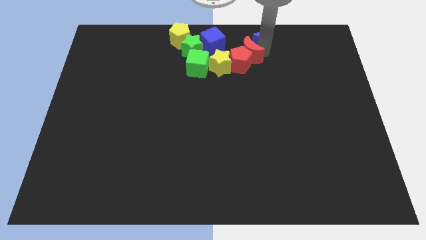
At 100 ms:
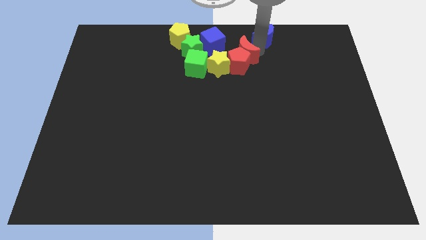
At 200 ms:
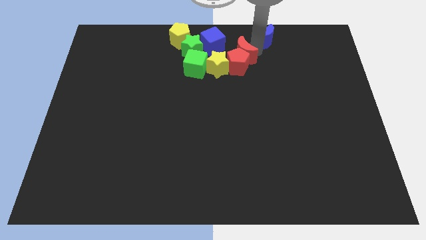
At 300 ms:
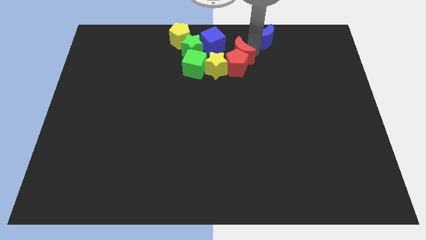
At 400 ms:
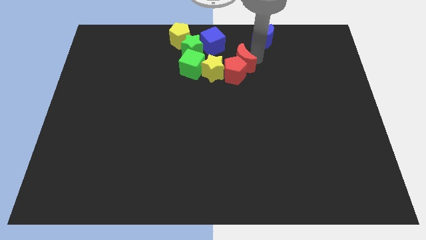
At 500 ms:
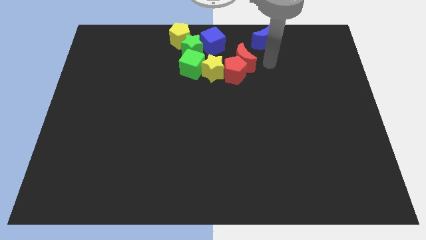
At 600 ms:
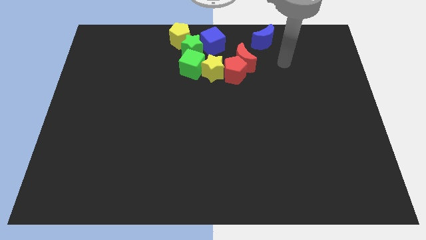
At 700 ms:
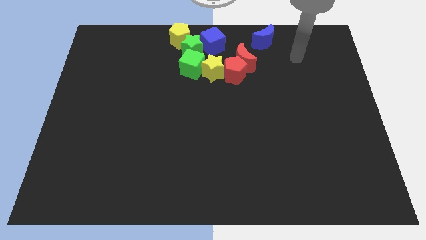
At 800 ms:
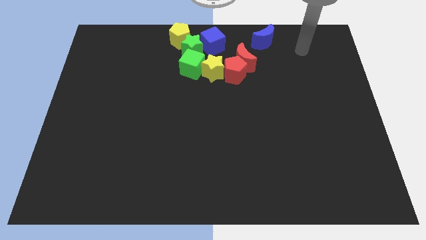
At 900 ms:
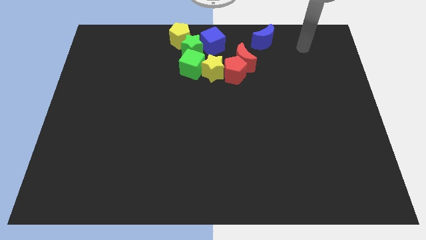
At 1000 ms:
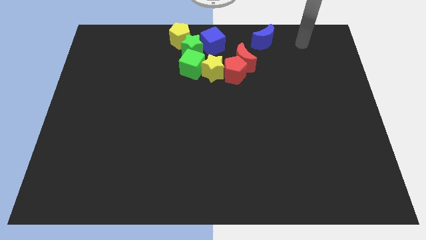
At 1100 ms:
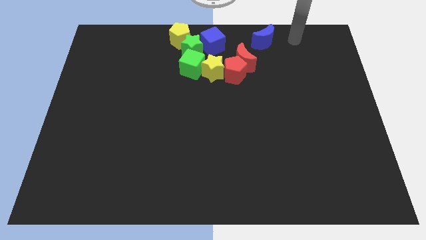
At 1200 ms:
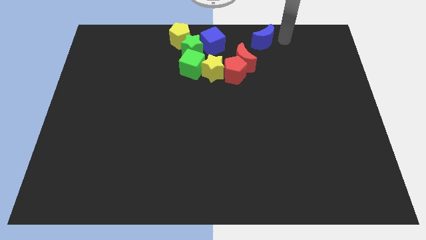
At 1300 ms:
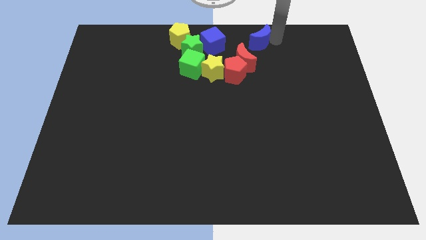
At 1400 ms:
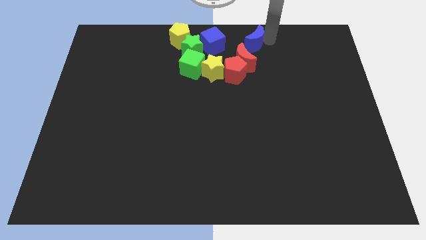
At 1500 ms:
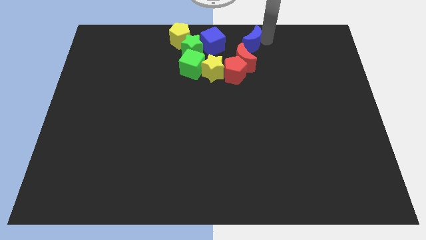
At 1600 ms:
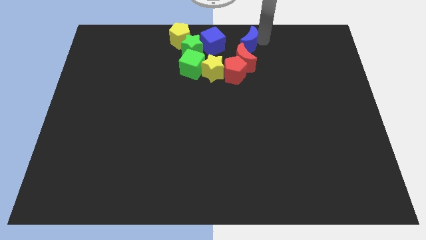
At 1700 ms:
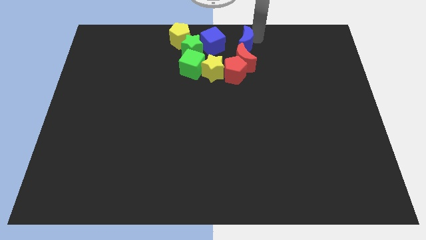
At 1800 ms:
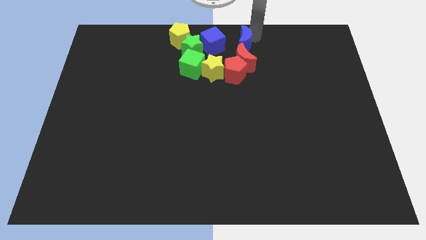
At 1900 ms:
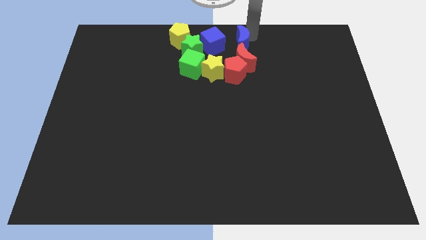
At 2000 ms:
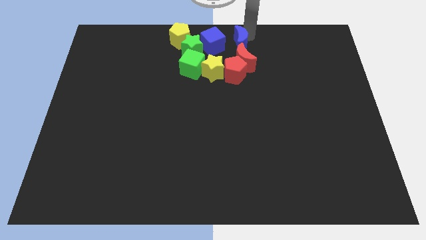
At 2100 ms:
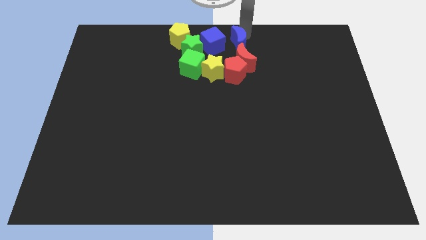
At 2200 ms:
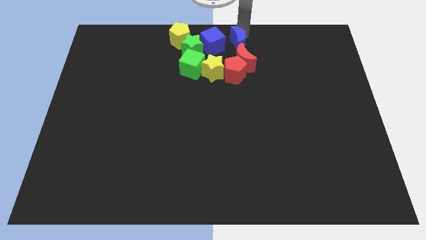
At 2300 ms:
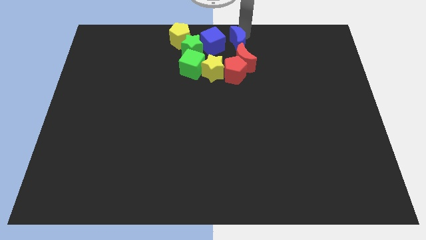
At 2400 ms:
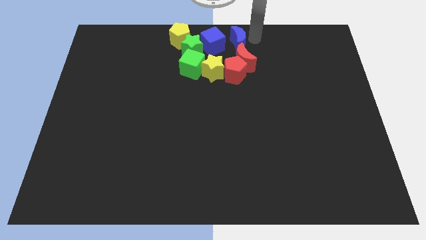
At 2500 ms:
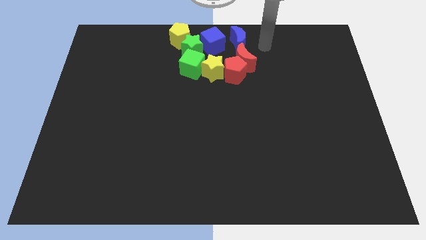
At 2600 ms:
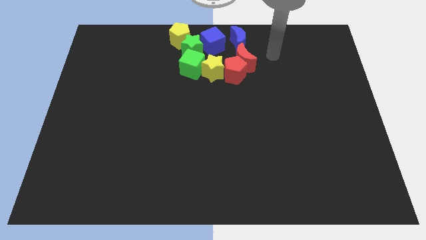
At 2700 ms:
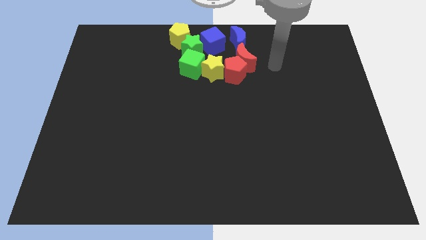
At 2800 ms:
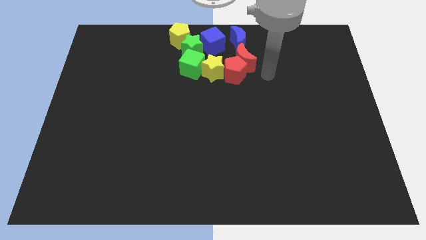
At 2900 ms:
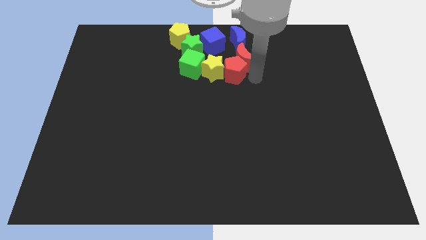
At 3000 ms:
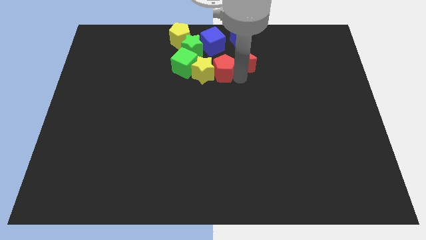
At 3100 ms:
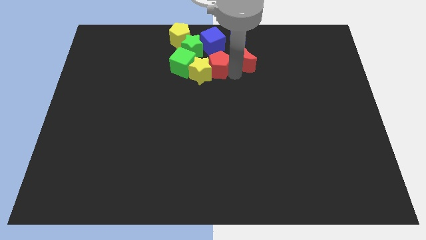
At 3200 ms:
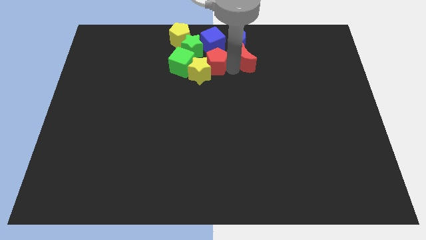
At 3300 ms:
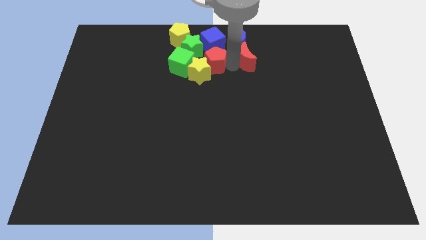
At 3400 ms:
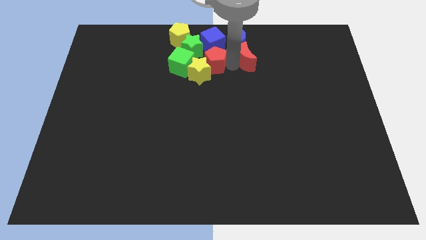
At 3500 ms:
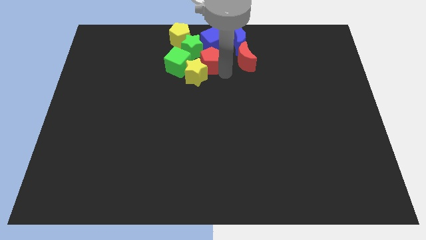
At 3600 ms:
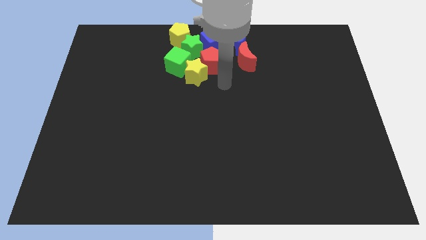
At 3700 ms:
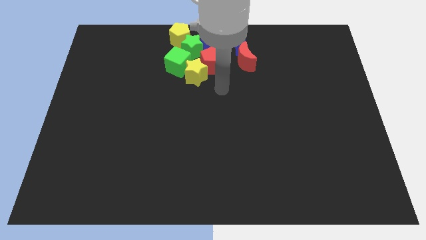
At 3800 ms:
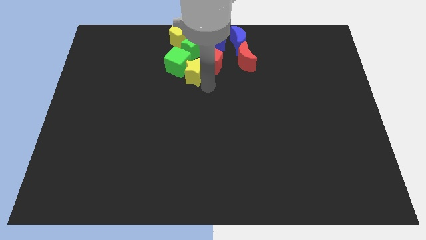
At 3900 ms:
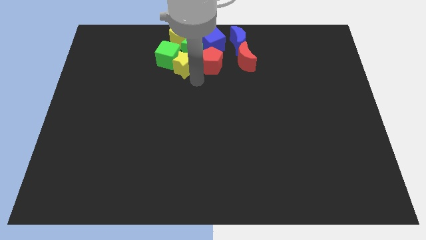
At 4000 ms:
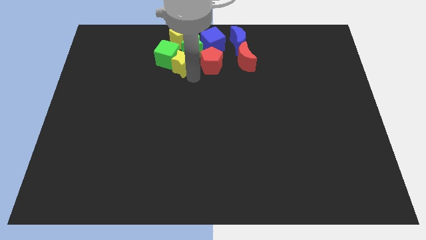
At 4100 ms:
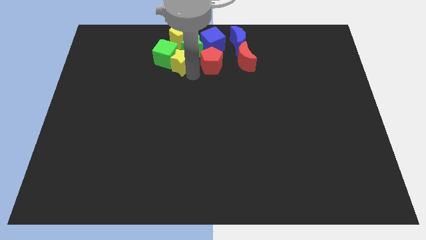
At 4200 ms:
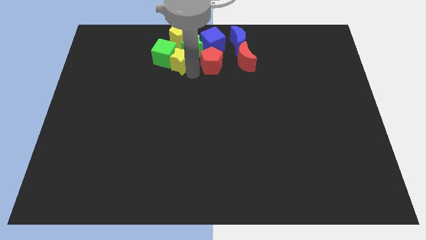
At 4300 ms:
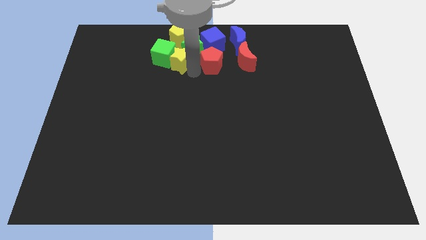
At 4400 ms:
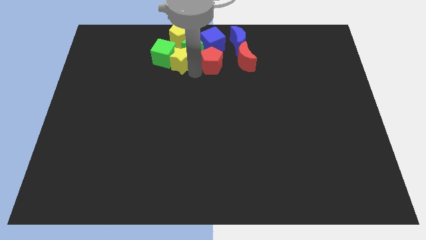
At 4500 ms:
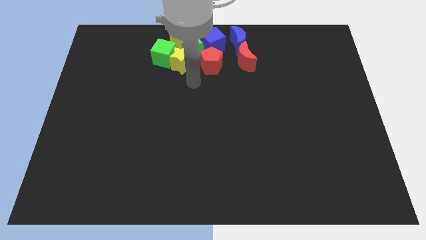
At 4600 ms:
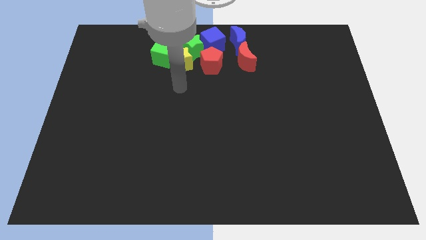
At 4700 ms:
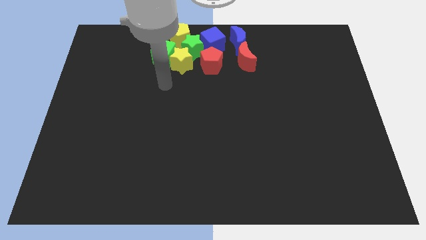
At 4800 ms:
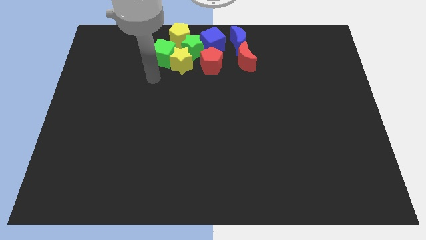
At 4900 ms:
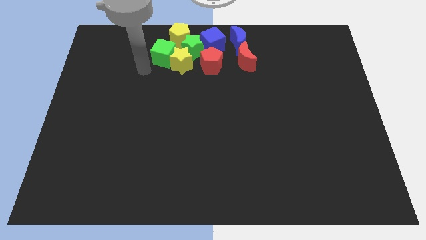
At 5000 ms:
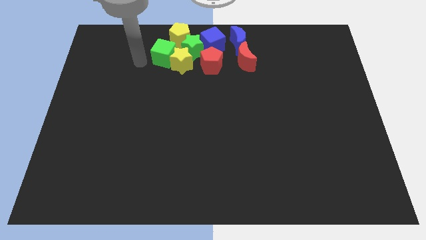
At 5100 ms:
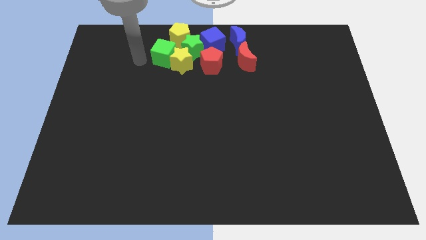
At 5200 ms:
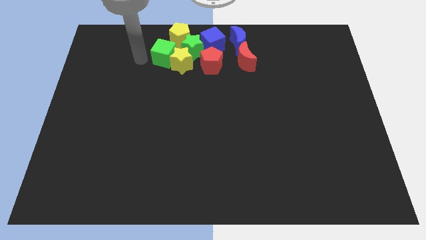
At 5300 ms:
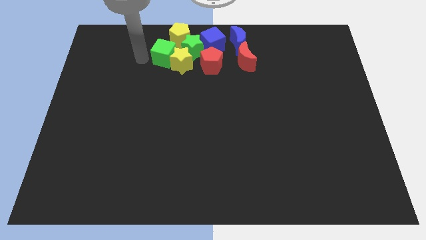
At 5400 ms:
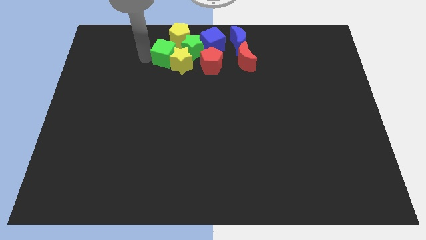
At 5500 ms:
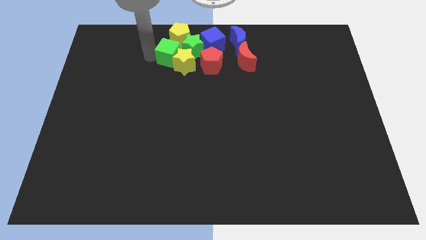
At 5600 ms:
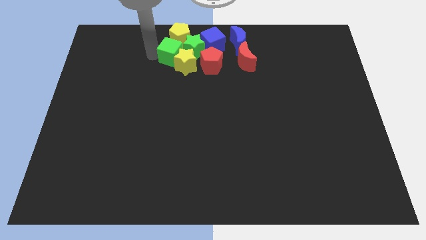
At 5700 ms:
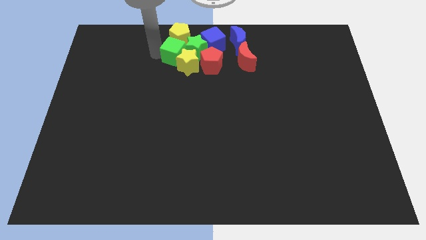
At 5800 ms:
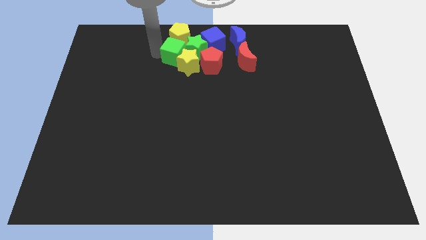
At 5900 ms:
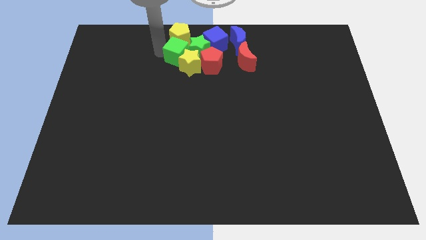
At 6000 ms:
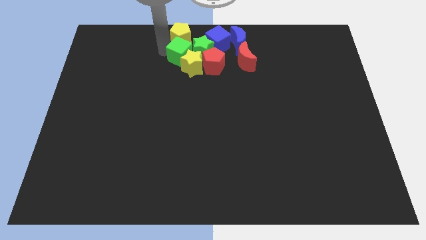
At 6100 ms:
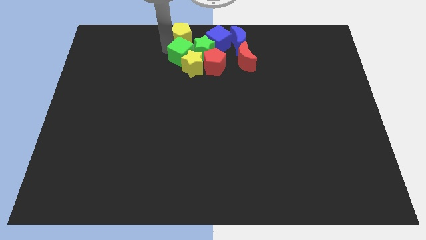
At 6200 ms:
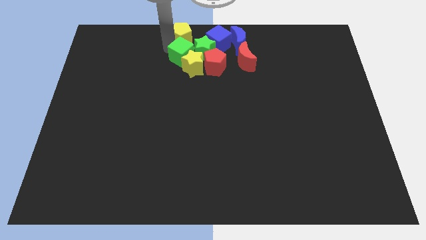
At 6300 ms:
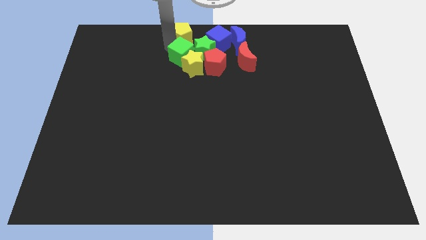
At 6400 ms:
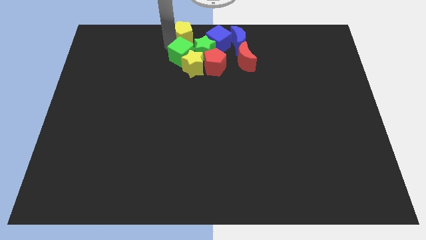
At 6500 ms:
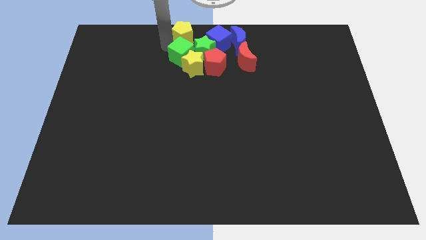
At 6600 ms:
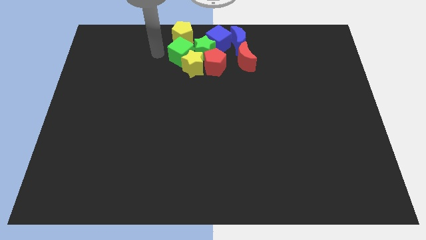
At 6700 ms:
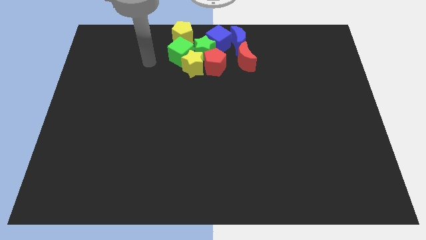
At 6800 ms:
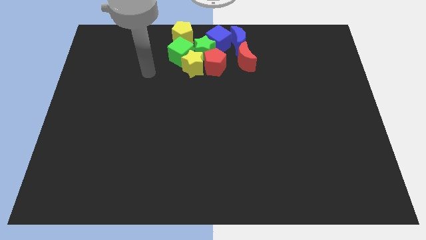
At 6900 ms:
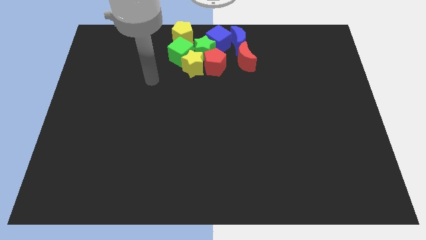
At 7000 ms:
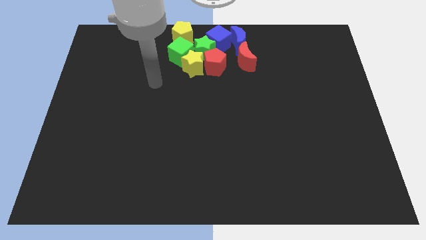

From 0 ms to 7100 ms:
adjust the group of blocks at the top center

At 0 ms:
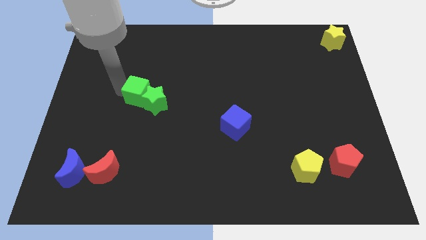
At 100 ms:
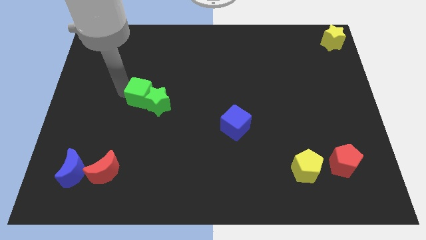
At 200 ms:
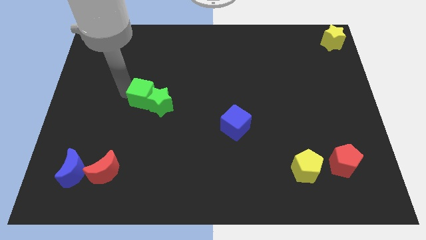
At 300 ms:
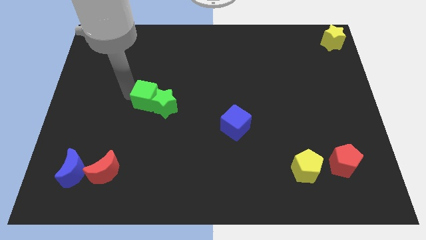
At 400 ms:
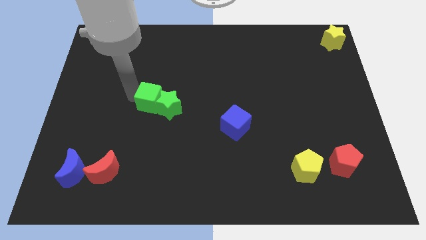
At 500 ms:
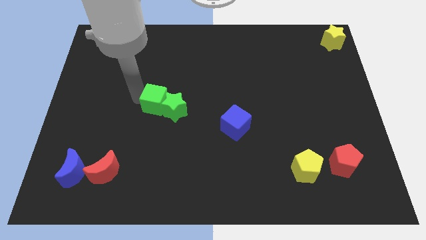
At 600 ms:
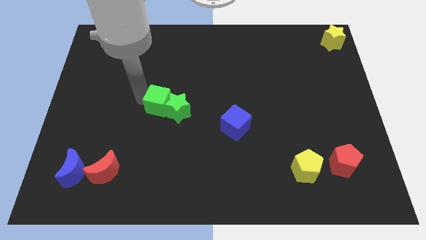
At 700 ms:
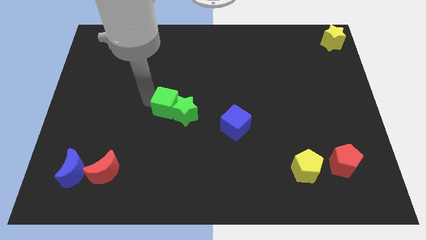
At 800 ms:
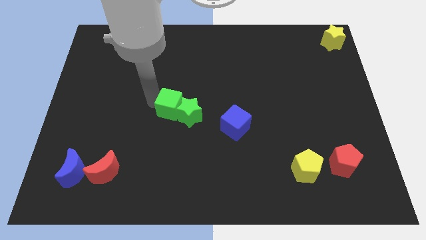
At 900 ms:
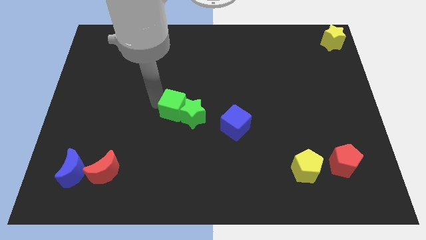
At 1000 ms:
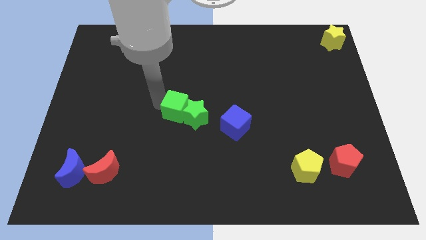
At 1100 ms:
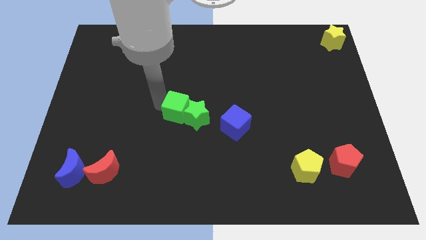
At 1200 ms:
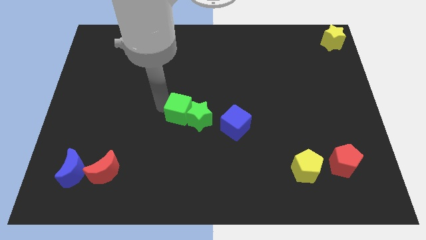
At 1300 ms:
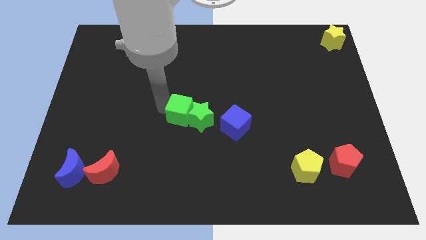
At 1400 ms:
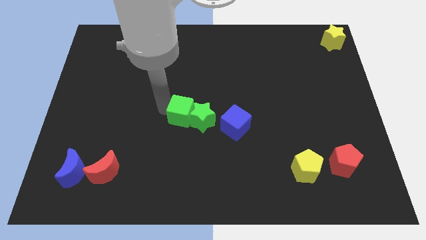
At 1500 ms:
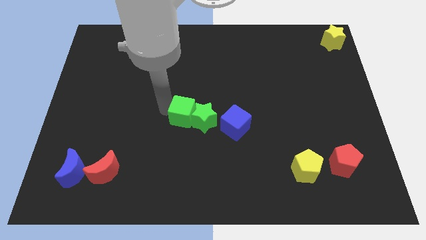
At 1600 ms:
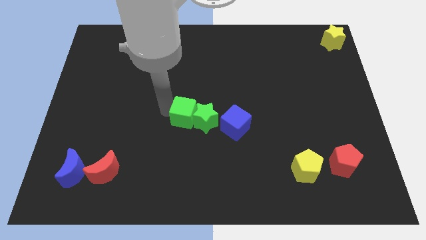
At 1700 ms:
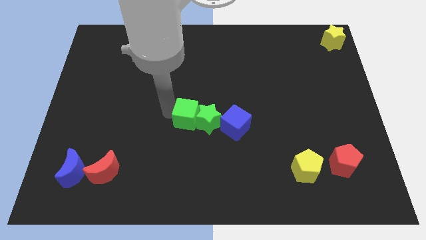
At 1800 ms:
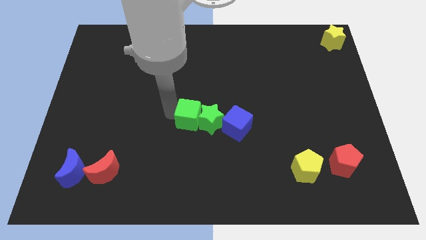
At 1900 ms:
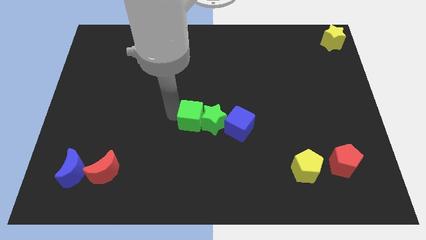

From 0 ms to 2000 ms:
place both the green blocks at the center
